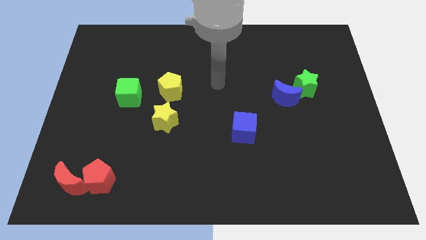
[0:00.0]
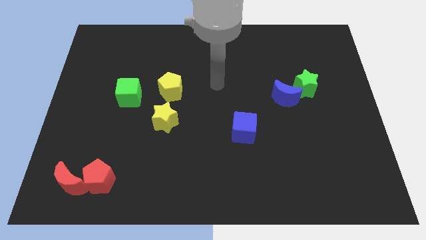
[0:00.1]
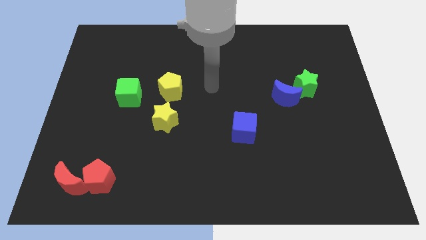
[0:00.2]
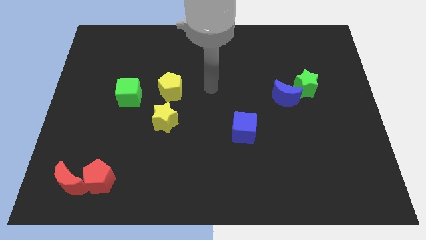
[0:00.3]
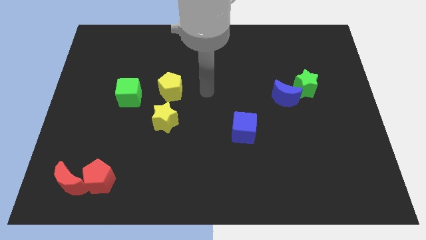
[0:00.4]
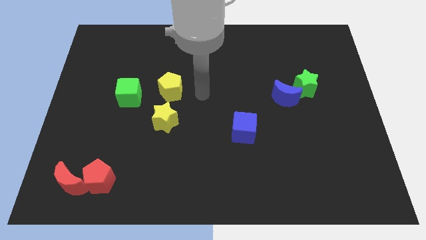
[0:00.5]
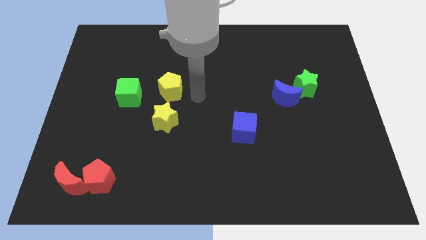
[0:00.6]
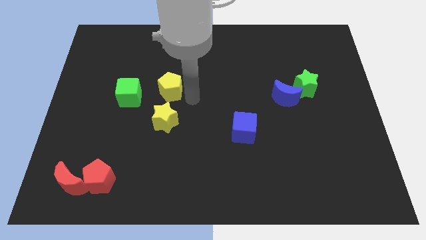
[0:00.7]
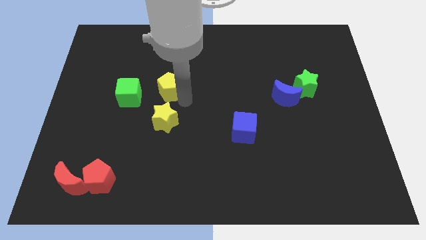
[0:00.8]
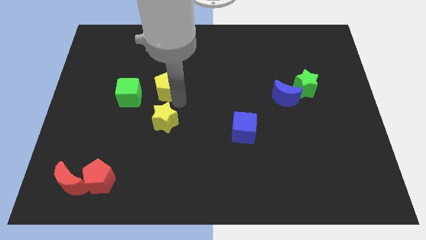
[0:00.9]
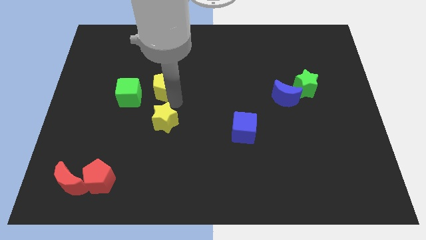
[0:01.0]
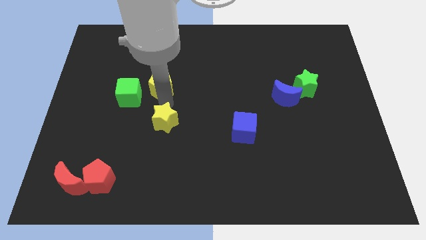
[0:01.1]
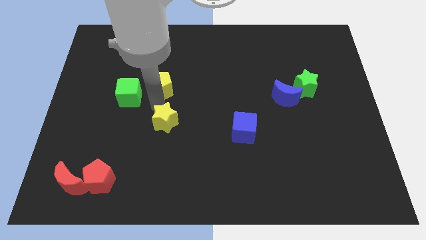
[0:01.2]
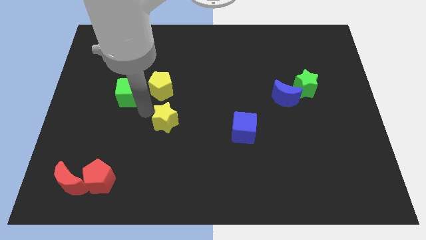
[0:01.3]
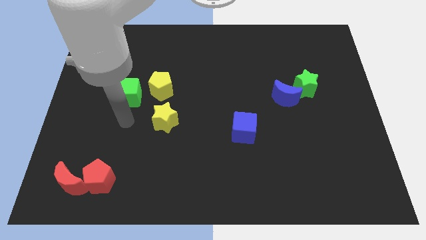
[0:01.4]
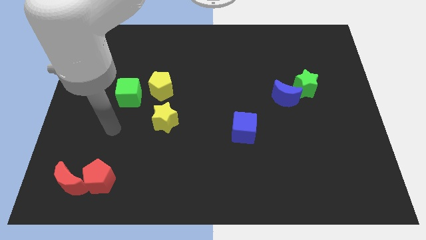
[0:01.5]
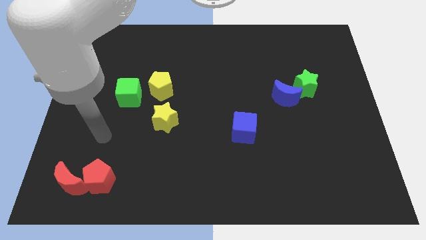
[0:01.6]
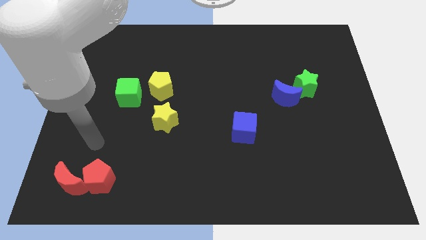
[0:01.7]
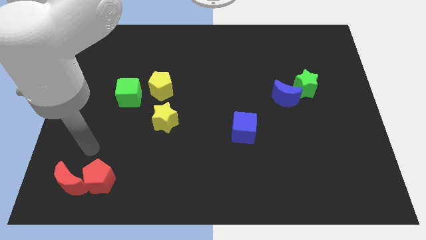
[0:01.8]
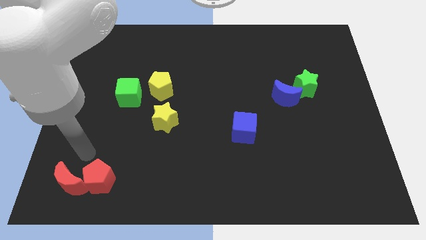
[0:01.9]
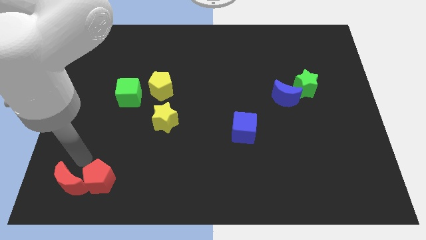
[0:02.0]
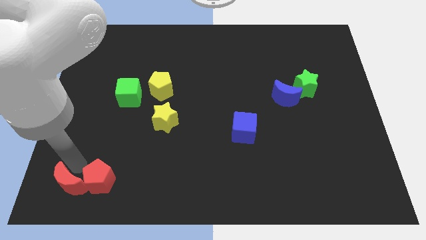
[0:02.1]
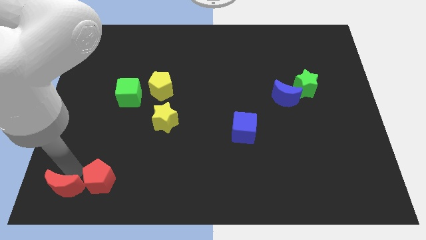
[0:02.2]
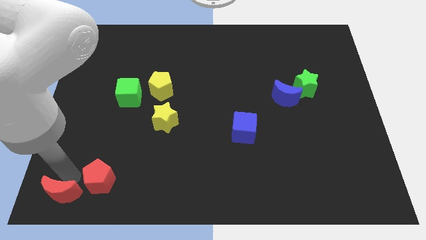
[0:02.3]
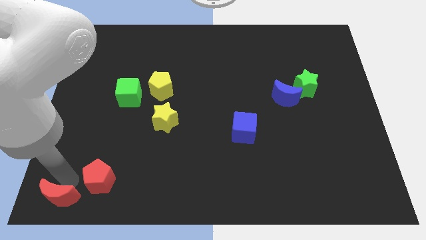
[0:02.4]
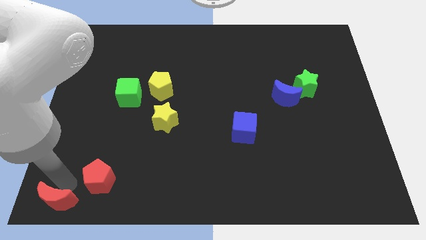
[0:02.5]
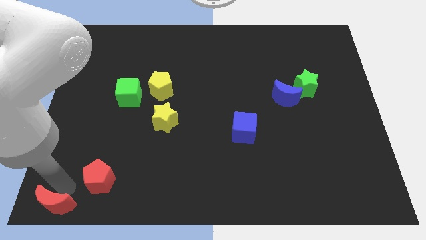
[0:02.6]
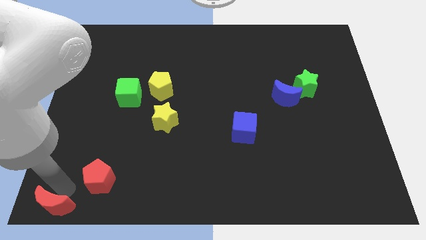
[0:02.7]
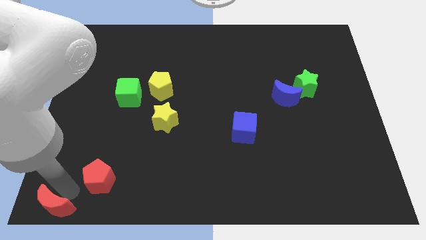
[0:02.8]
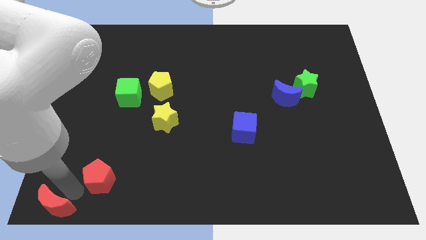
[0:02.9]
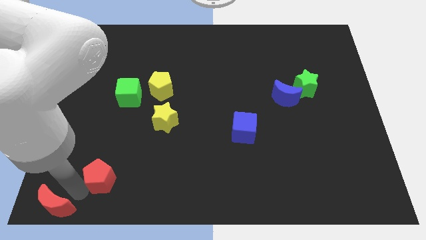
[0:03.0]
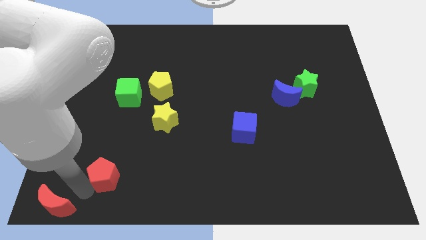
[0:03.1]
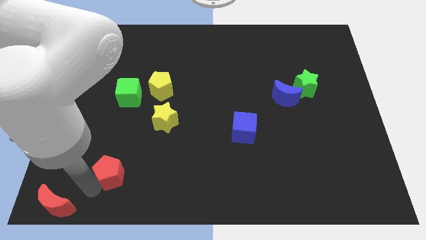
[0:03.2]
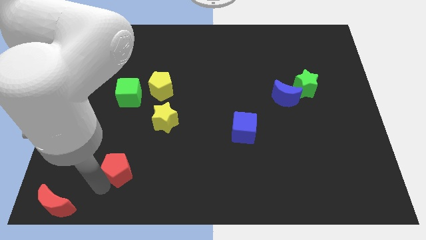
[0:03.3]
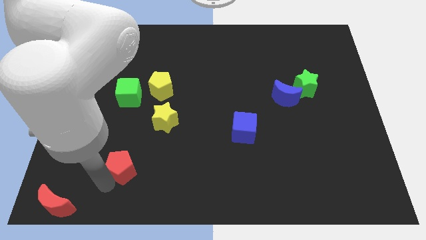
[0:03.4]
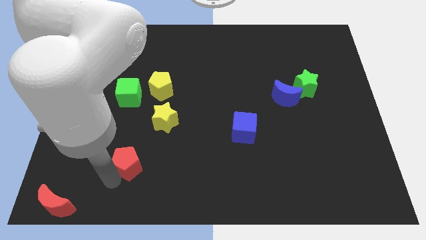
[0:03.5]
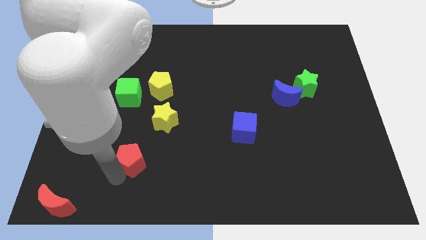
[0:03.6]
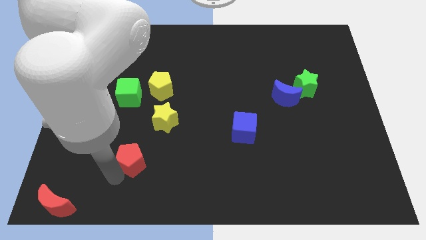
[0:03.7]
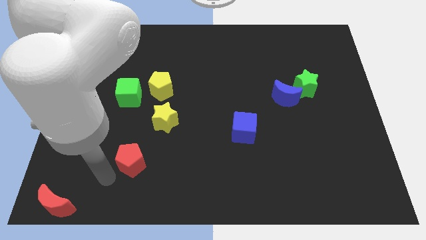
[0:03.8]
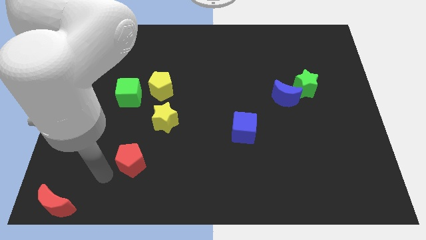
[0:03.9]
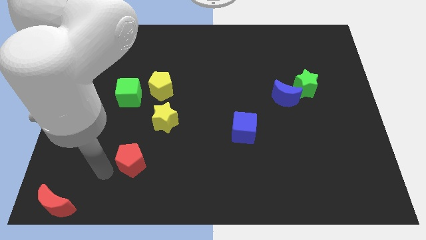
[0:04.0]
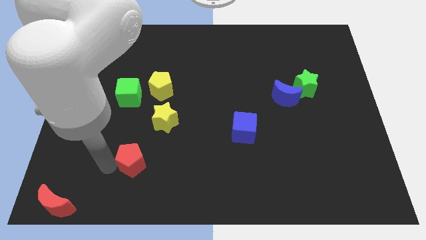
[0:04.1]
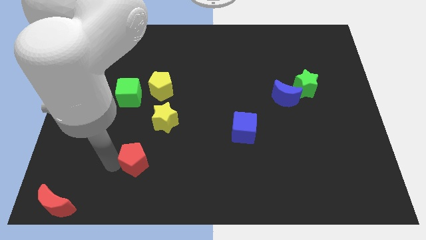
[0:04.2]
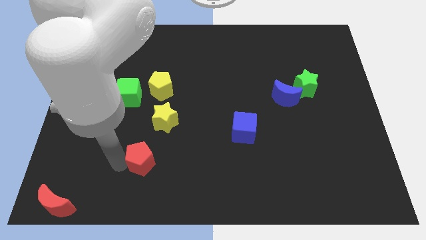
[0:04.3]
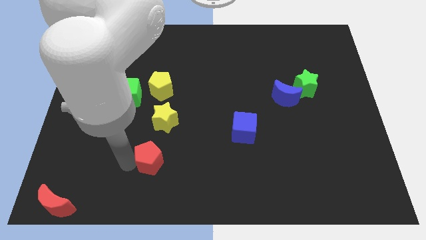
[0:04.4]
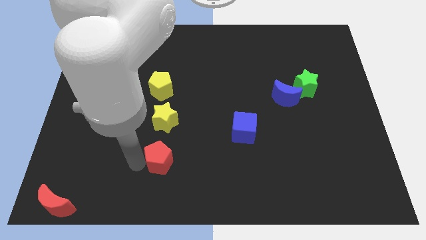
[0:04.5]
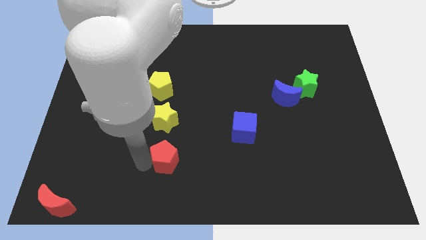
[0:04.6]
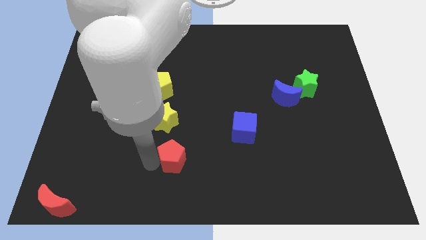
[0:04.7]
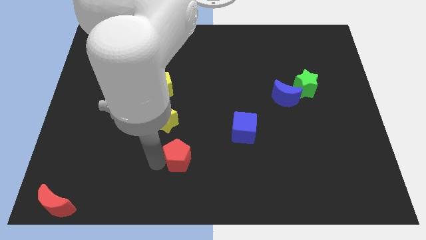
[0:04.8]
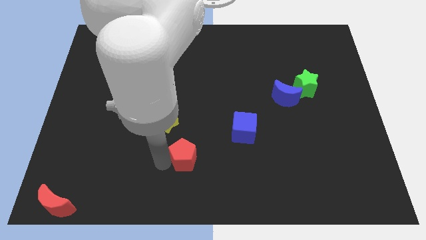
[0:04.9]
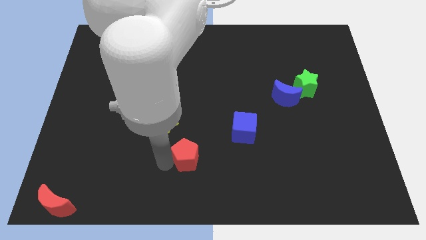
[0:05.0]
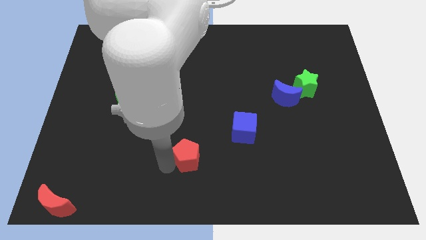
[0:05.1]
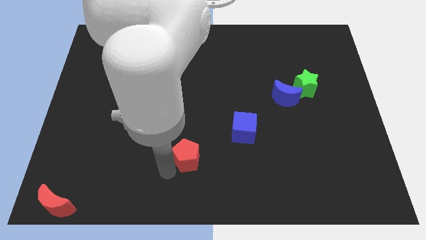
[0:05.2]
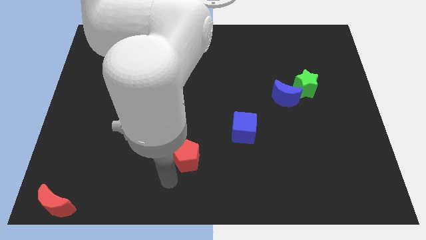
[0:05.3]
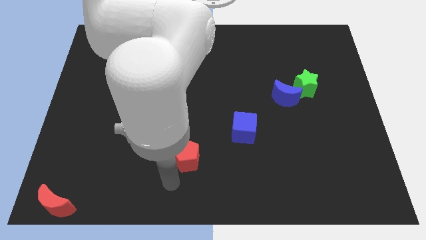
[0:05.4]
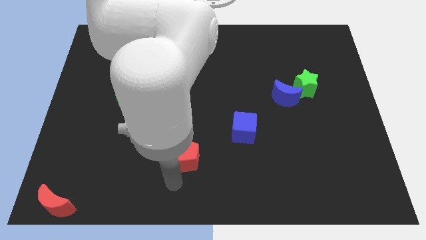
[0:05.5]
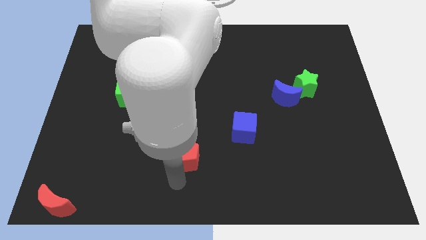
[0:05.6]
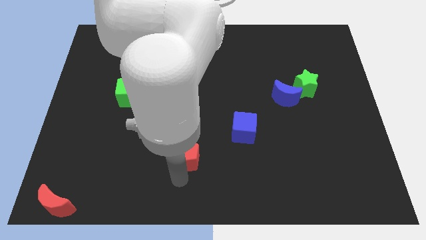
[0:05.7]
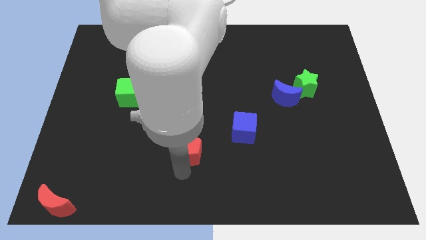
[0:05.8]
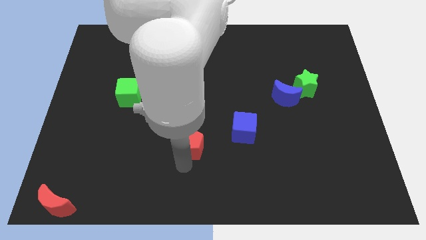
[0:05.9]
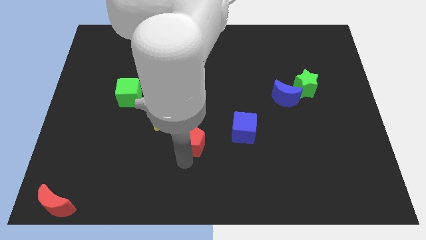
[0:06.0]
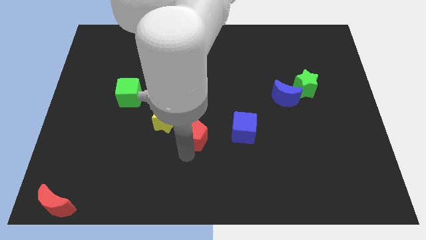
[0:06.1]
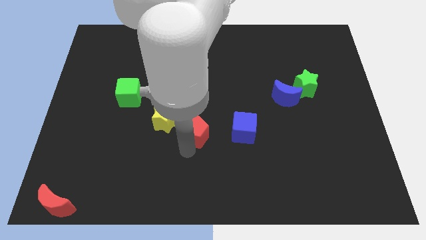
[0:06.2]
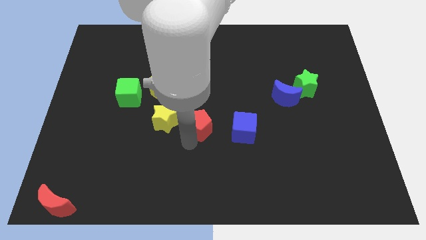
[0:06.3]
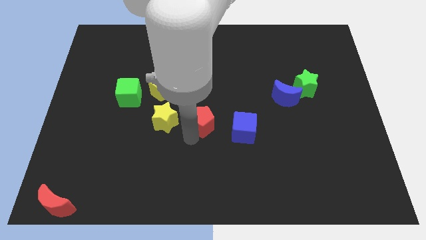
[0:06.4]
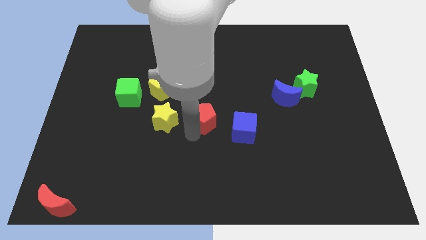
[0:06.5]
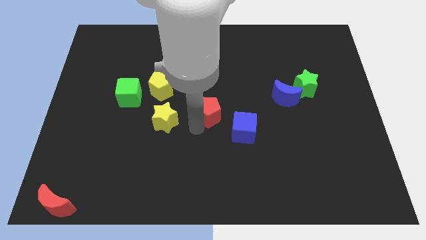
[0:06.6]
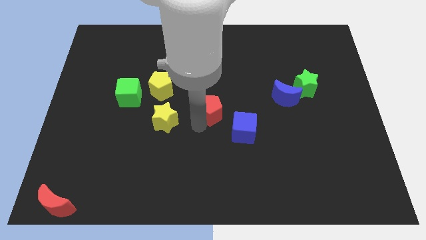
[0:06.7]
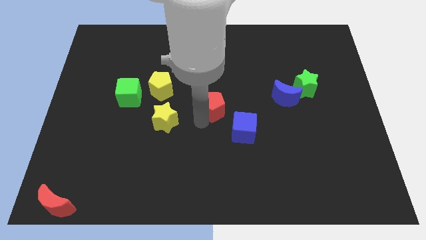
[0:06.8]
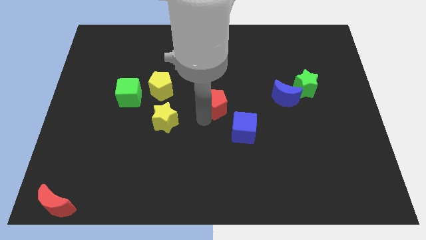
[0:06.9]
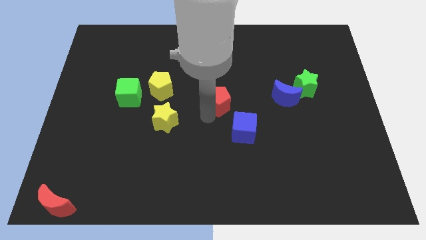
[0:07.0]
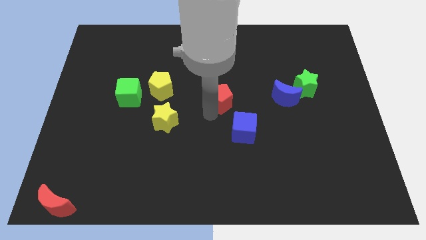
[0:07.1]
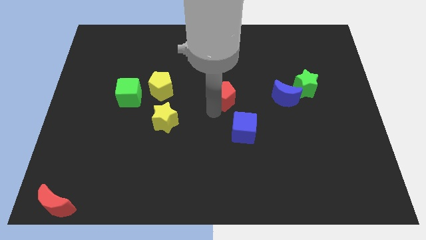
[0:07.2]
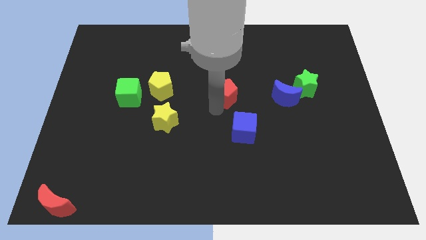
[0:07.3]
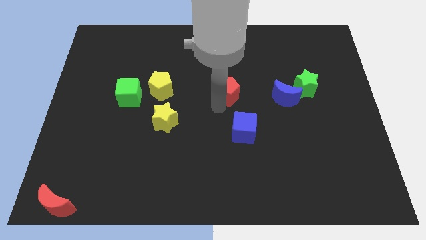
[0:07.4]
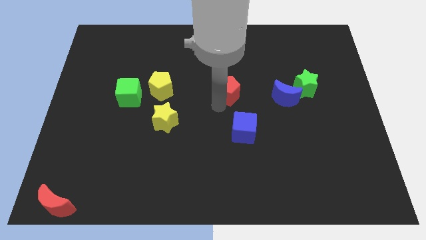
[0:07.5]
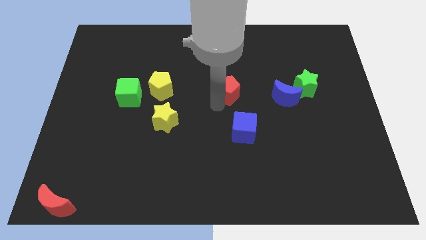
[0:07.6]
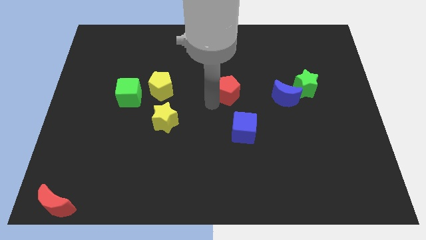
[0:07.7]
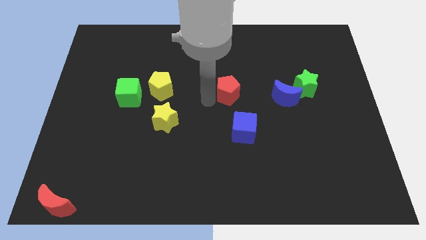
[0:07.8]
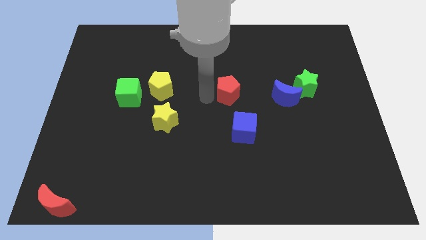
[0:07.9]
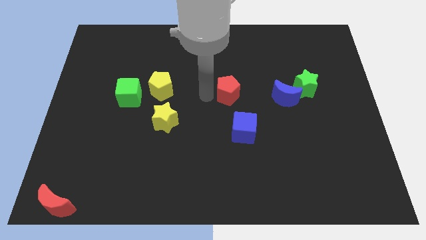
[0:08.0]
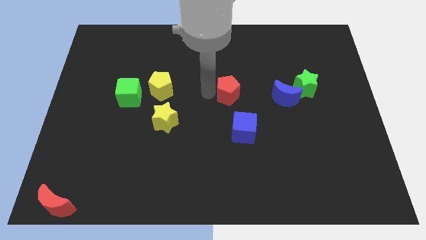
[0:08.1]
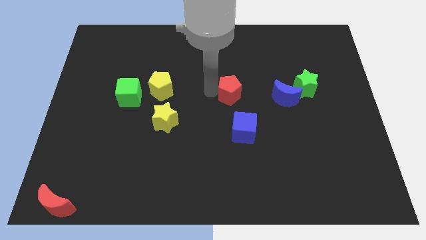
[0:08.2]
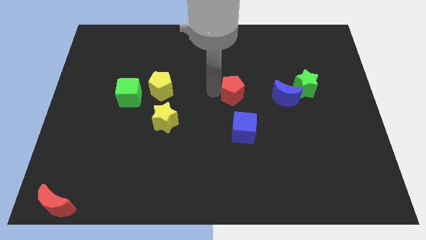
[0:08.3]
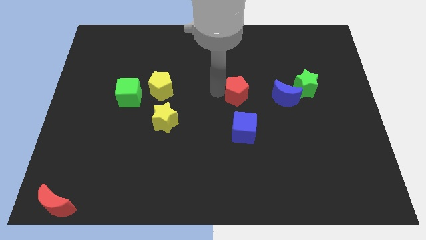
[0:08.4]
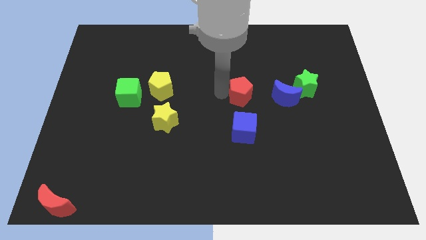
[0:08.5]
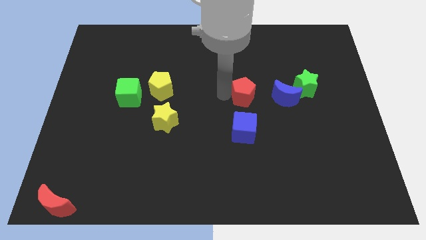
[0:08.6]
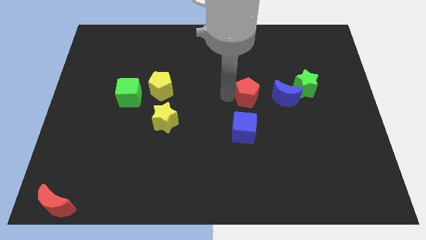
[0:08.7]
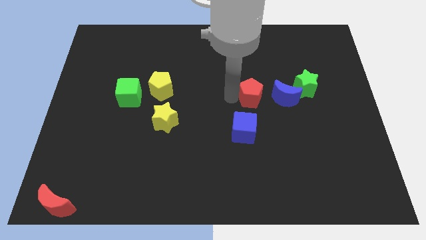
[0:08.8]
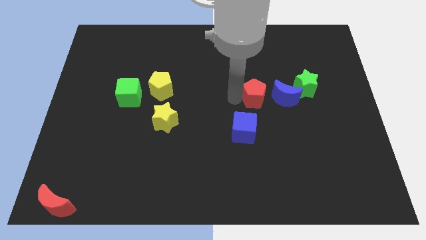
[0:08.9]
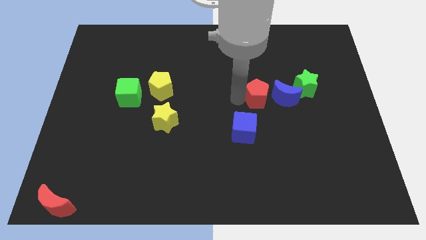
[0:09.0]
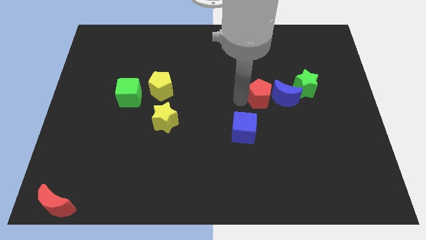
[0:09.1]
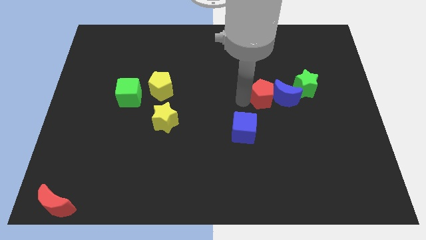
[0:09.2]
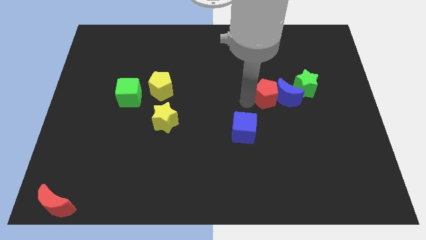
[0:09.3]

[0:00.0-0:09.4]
slide the red pentagon close to the blue moon
